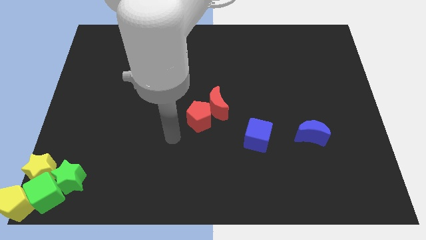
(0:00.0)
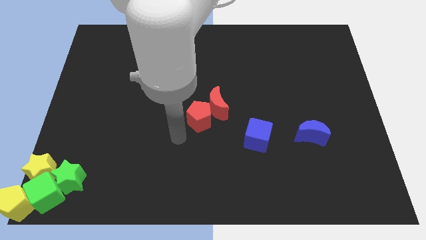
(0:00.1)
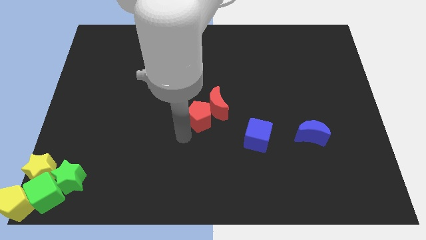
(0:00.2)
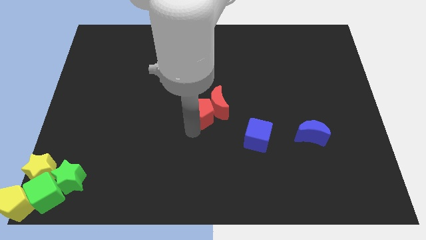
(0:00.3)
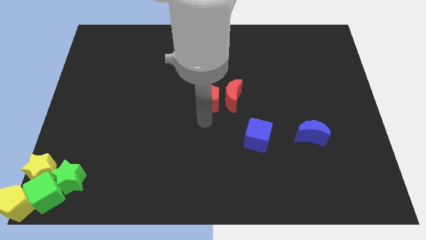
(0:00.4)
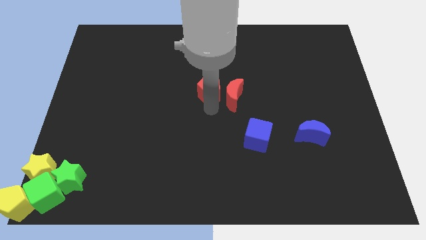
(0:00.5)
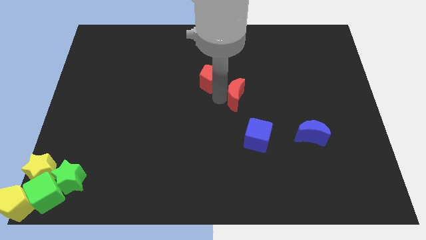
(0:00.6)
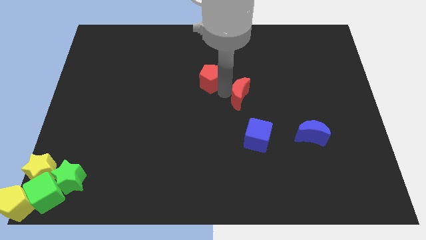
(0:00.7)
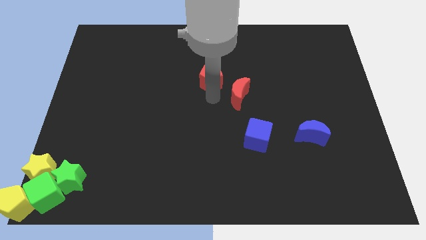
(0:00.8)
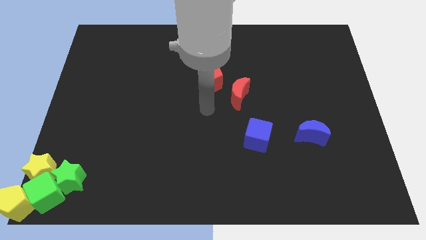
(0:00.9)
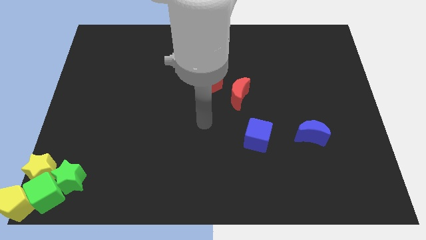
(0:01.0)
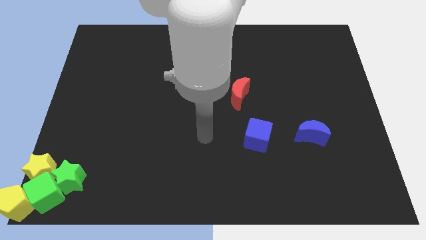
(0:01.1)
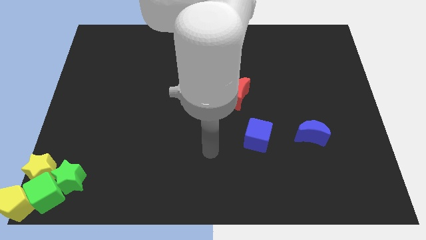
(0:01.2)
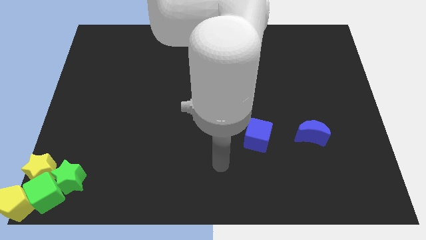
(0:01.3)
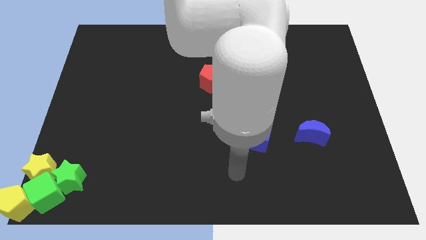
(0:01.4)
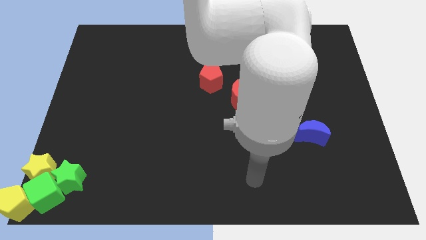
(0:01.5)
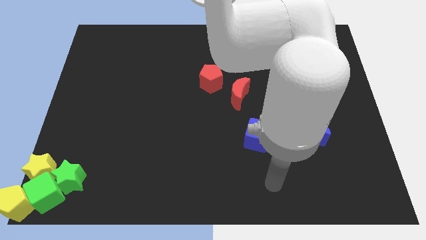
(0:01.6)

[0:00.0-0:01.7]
separate red moon and red pentagon

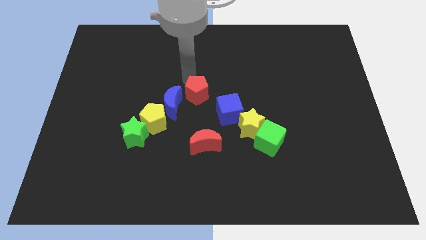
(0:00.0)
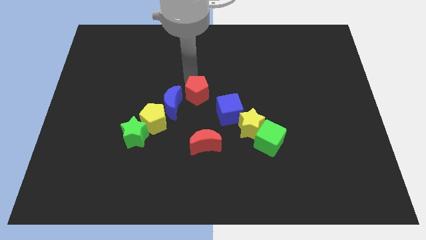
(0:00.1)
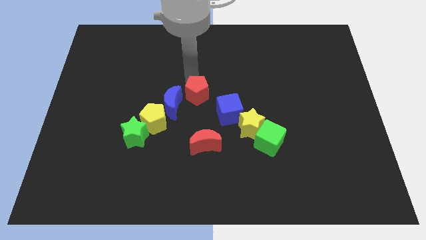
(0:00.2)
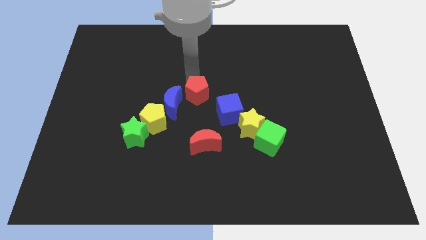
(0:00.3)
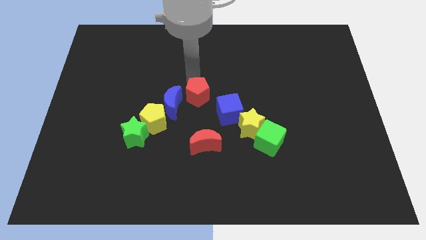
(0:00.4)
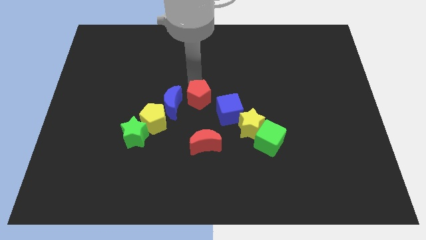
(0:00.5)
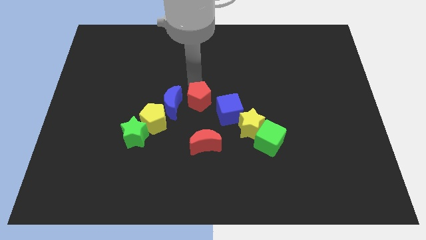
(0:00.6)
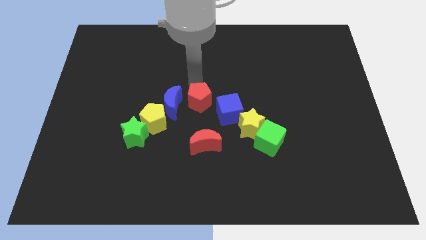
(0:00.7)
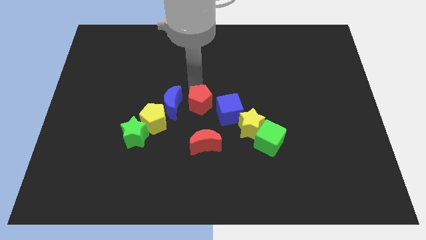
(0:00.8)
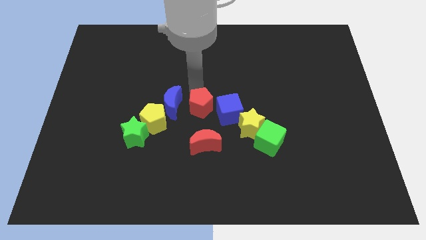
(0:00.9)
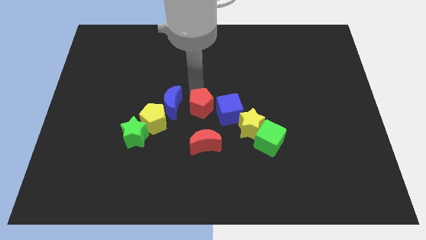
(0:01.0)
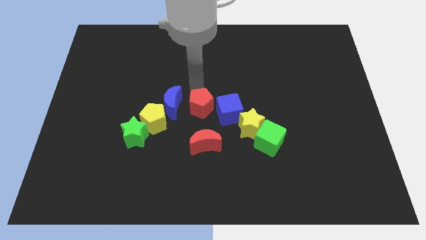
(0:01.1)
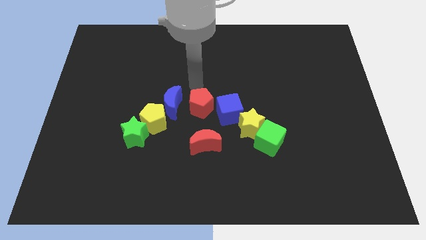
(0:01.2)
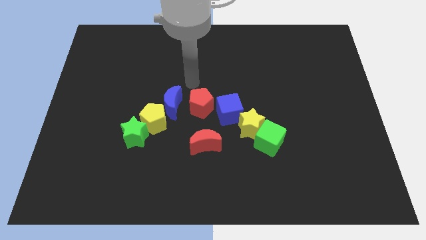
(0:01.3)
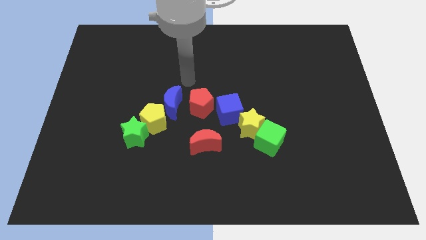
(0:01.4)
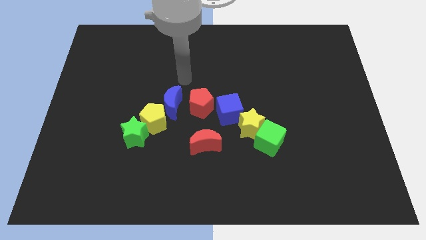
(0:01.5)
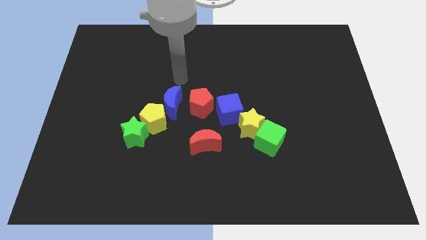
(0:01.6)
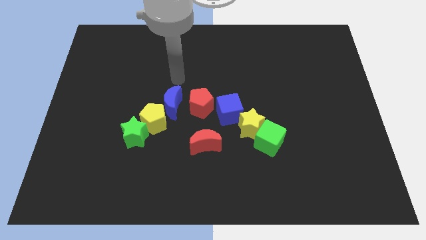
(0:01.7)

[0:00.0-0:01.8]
push the red pentagon towards the blue cube

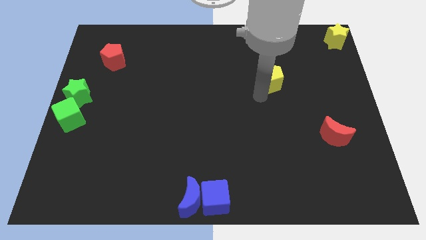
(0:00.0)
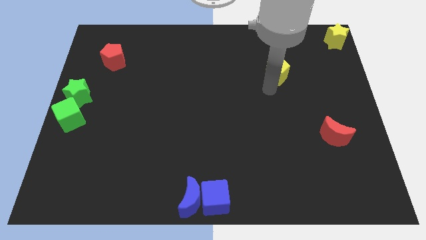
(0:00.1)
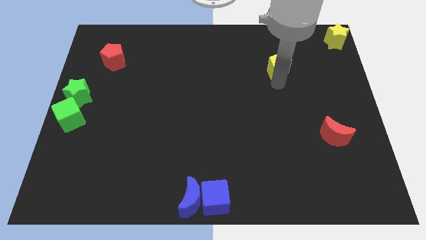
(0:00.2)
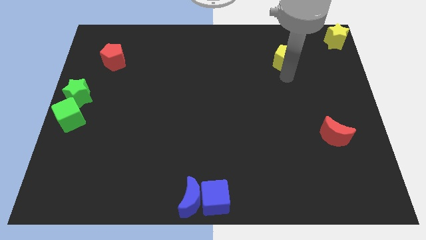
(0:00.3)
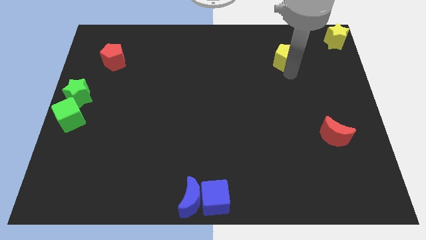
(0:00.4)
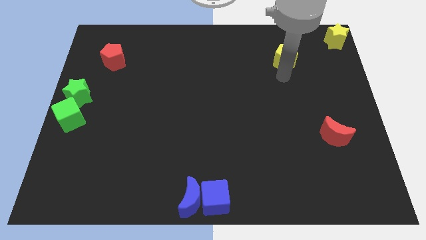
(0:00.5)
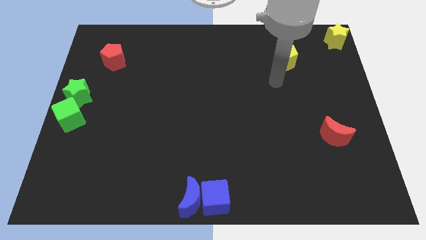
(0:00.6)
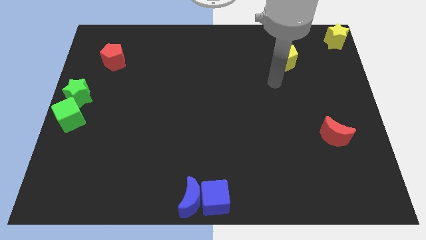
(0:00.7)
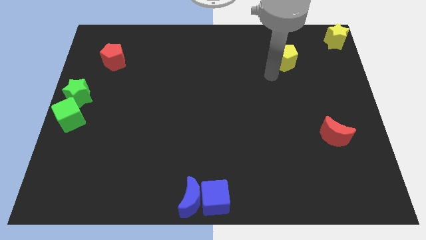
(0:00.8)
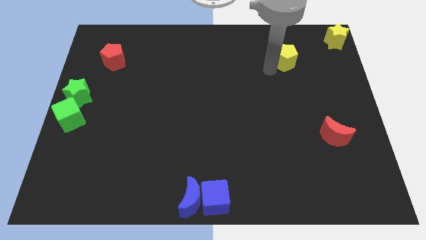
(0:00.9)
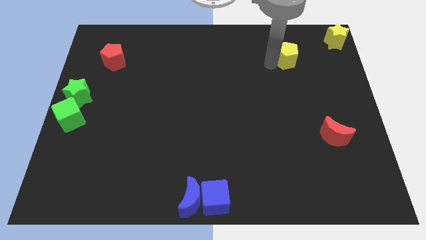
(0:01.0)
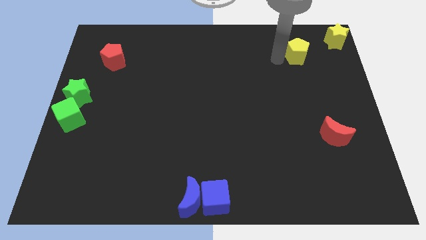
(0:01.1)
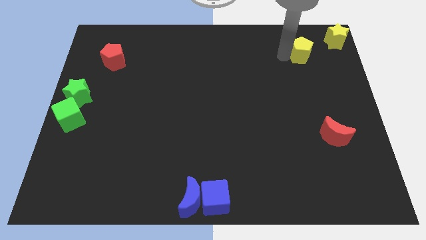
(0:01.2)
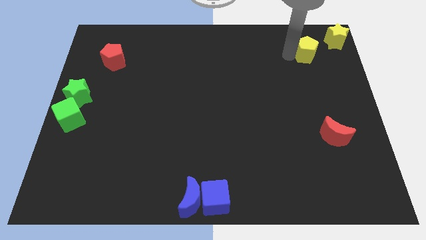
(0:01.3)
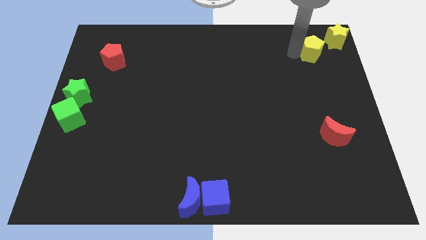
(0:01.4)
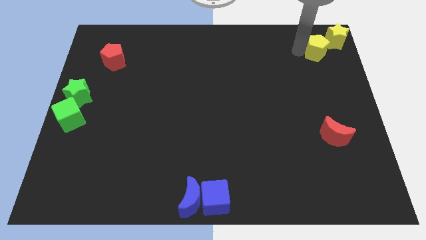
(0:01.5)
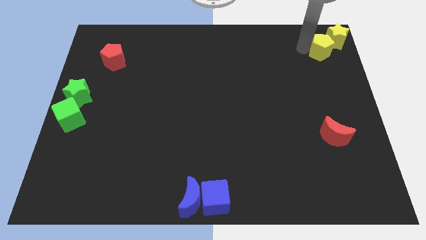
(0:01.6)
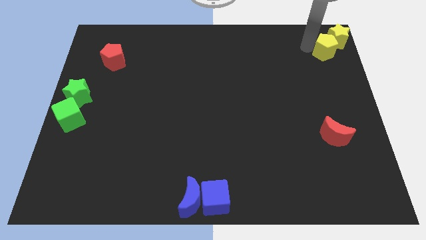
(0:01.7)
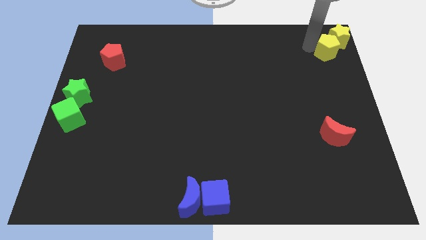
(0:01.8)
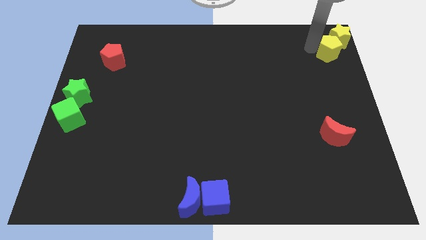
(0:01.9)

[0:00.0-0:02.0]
push the yellow pentagon into the yellow star

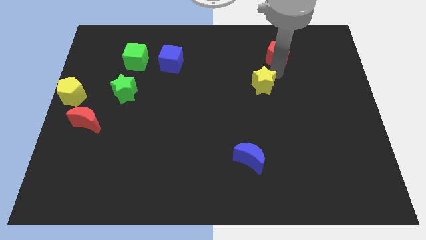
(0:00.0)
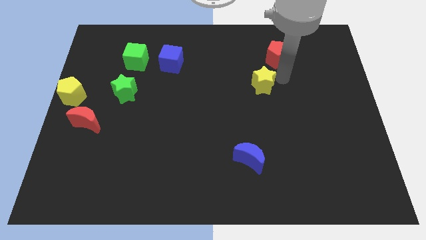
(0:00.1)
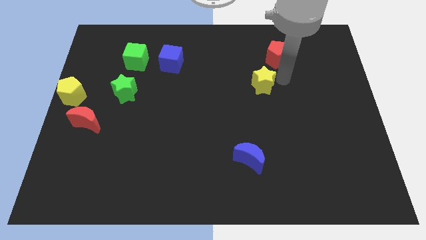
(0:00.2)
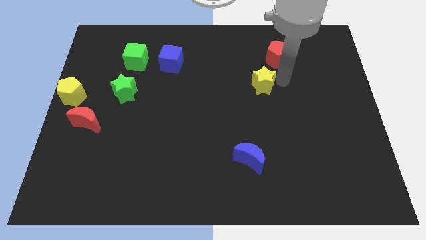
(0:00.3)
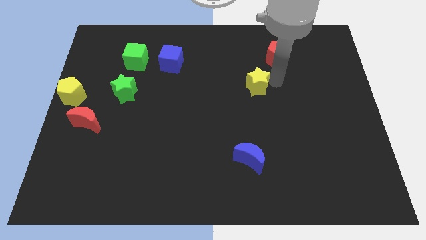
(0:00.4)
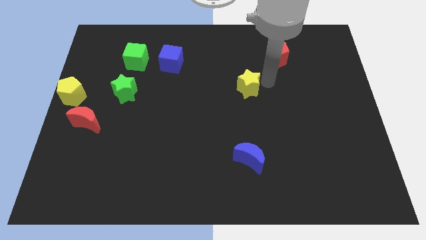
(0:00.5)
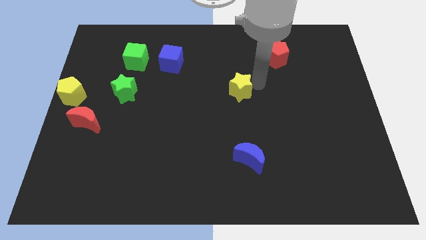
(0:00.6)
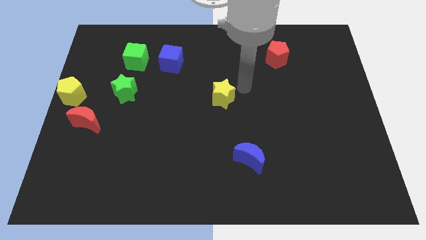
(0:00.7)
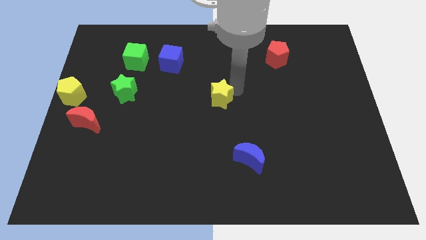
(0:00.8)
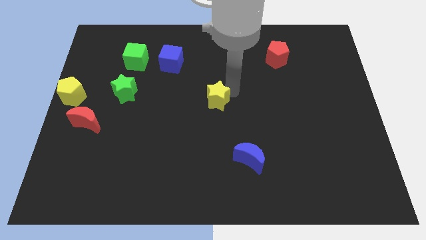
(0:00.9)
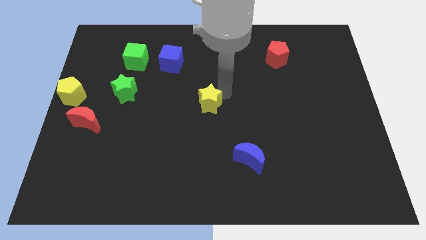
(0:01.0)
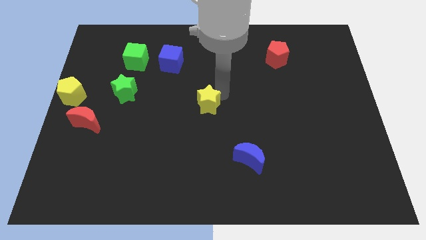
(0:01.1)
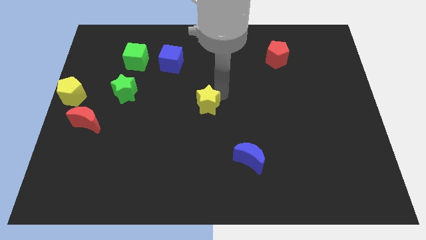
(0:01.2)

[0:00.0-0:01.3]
move the yellow star to the center of the board

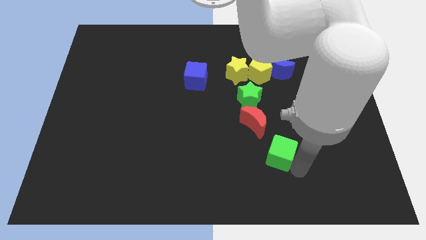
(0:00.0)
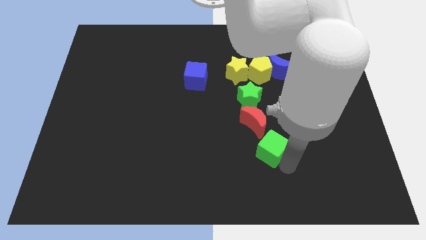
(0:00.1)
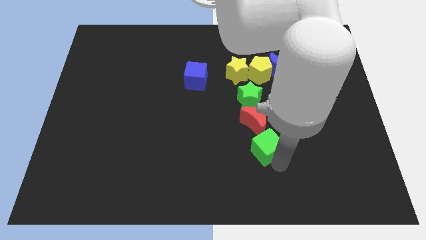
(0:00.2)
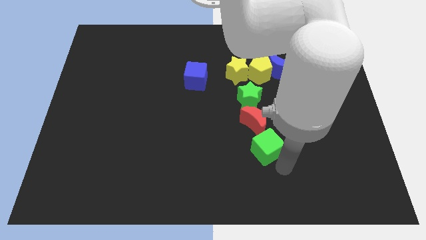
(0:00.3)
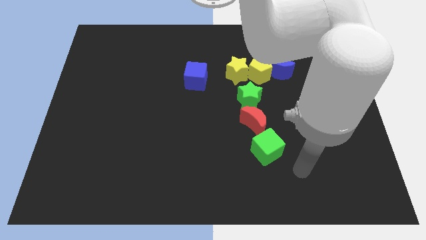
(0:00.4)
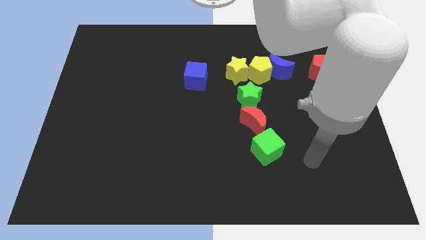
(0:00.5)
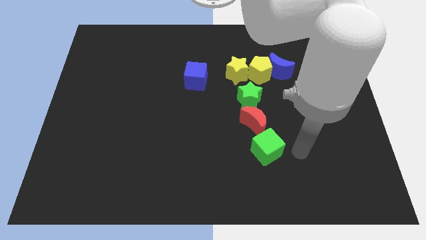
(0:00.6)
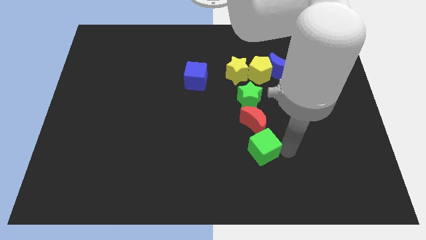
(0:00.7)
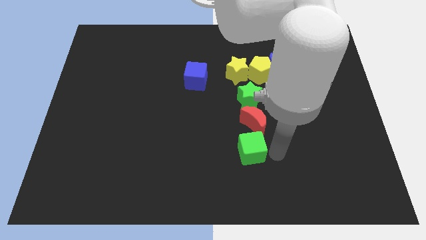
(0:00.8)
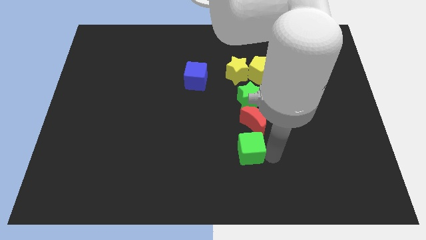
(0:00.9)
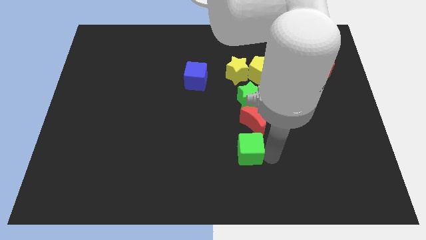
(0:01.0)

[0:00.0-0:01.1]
move the green cube below the red crescent

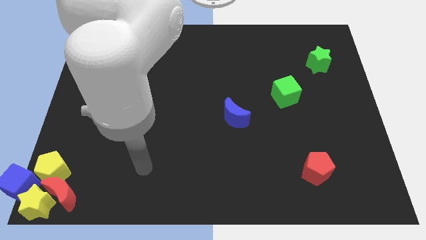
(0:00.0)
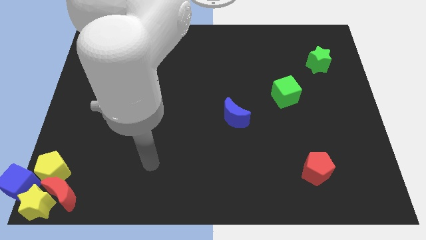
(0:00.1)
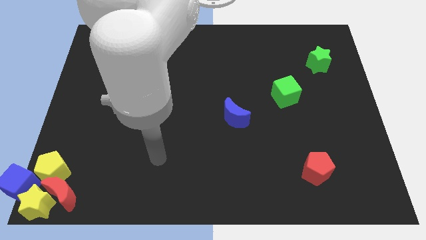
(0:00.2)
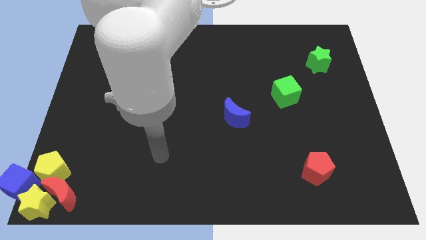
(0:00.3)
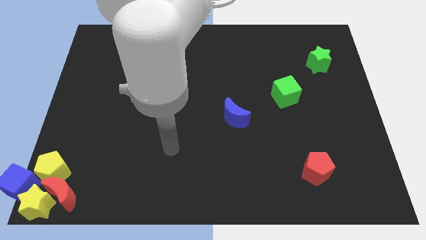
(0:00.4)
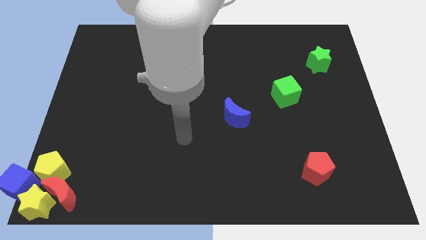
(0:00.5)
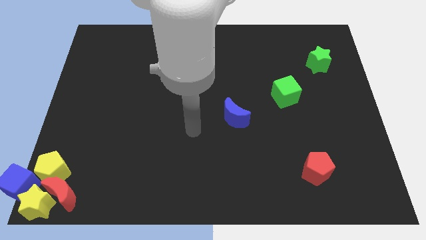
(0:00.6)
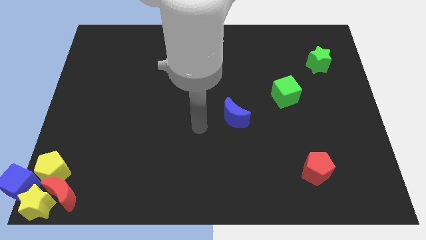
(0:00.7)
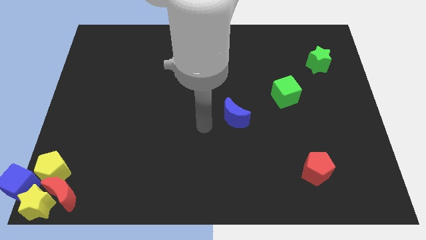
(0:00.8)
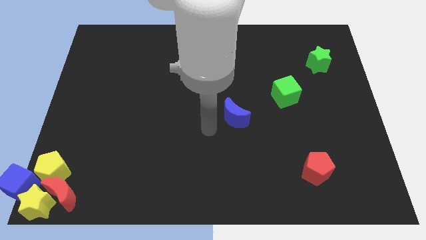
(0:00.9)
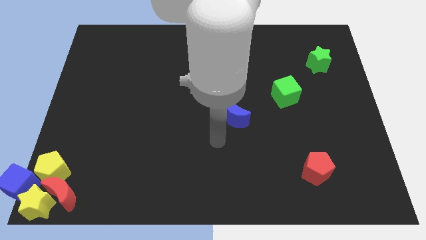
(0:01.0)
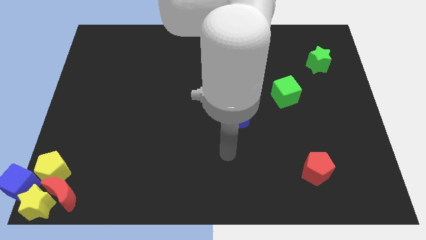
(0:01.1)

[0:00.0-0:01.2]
move arm close to blue crescent
